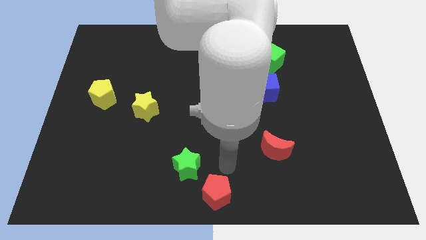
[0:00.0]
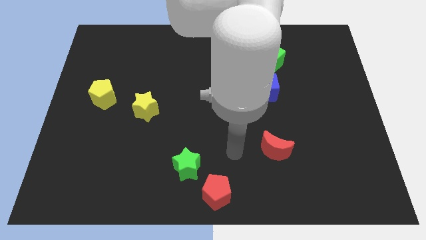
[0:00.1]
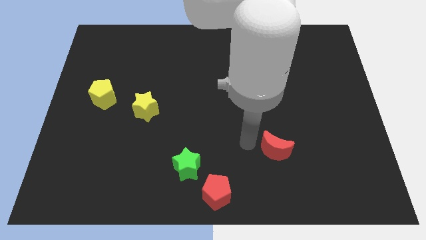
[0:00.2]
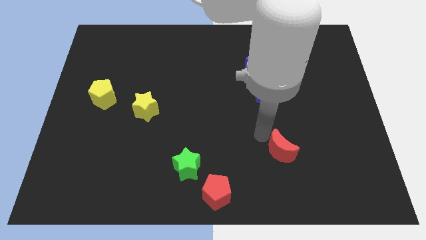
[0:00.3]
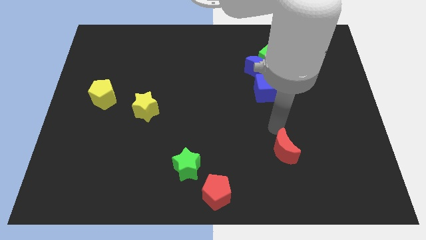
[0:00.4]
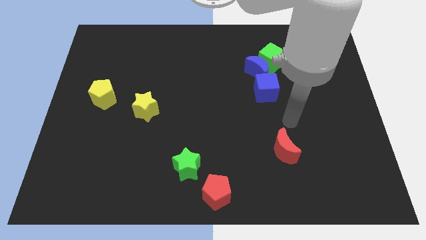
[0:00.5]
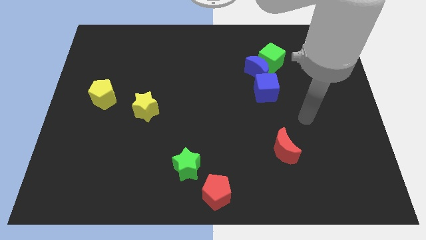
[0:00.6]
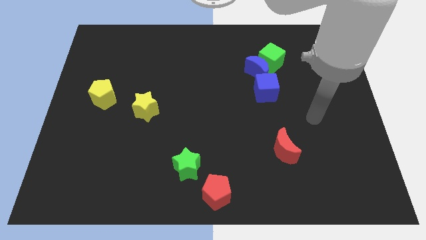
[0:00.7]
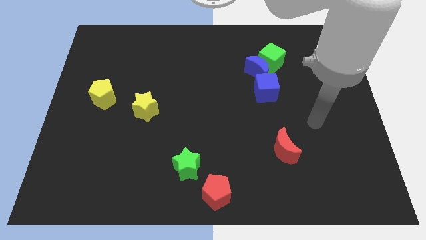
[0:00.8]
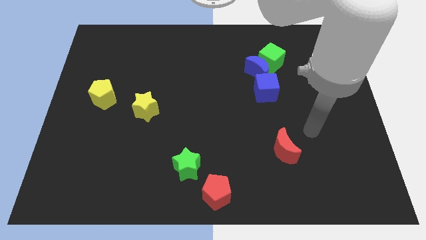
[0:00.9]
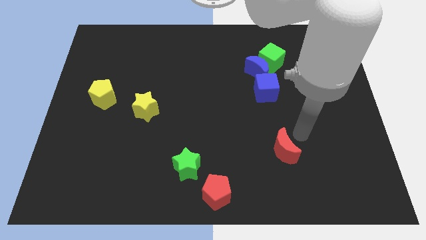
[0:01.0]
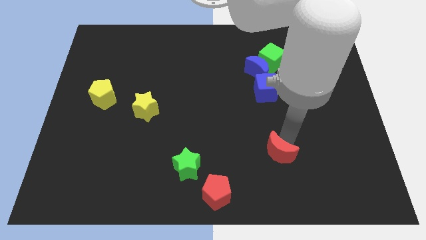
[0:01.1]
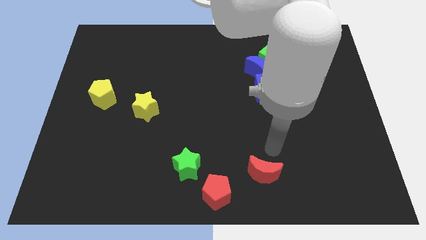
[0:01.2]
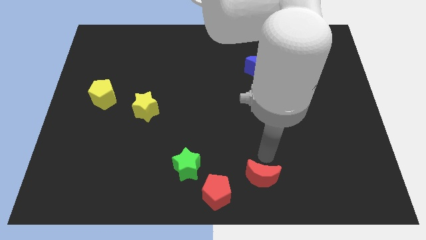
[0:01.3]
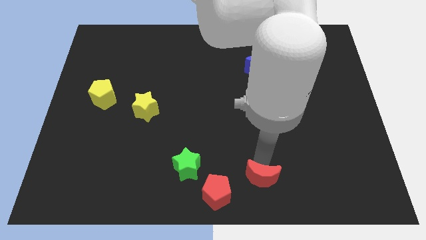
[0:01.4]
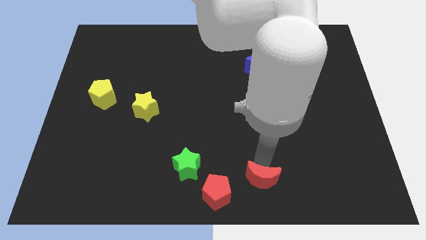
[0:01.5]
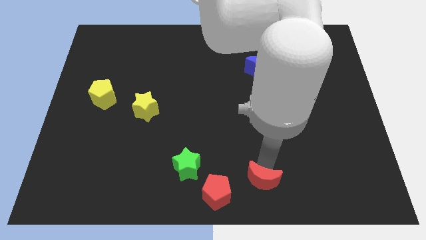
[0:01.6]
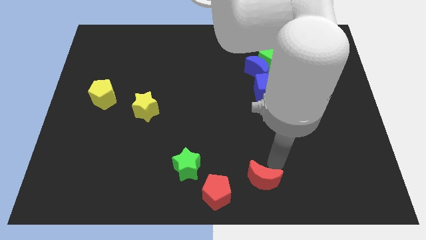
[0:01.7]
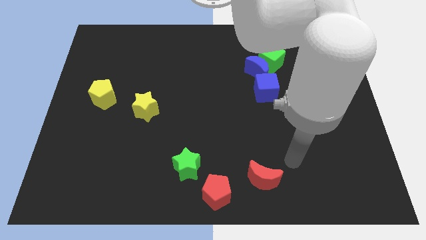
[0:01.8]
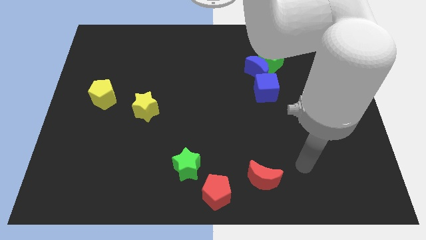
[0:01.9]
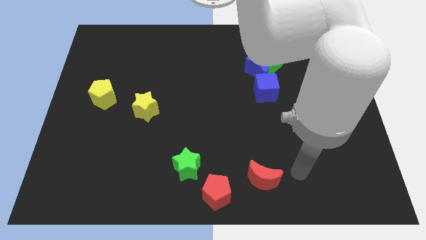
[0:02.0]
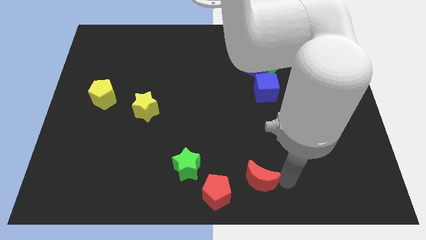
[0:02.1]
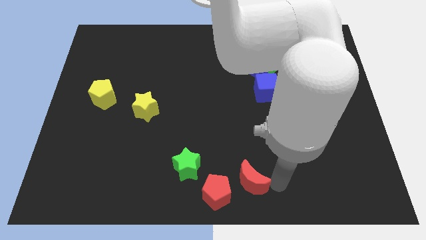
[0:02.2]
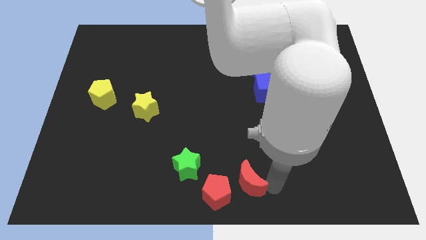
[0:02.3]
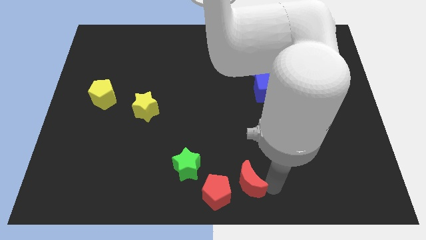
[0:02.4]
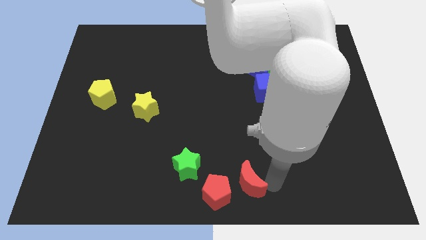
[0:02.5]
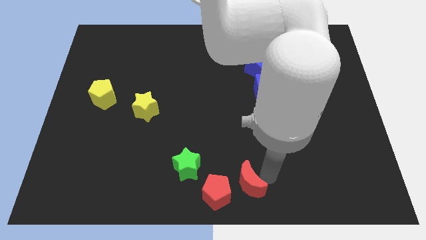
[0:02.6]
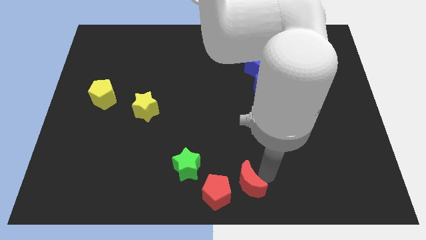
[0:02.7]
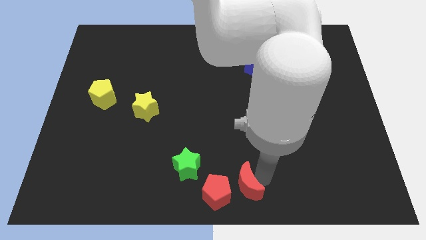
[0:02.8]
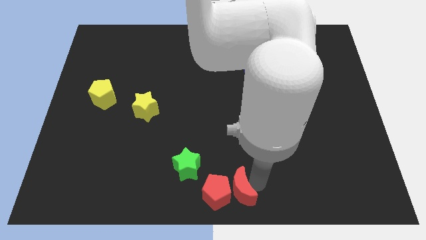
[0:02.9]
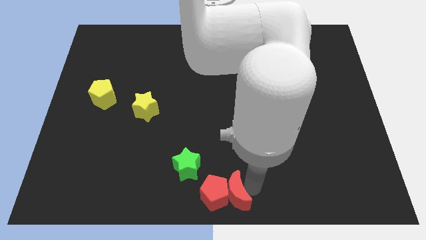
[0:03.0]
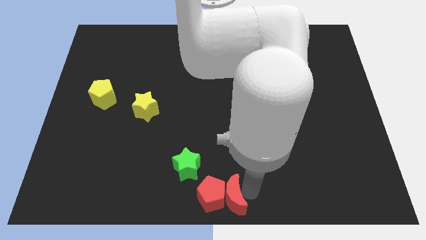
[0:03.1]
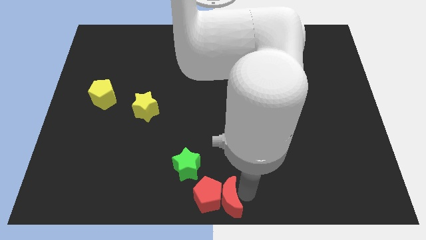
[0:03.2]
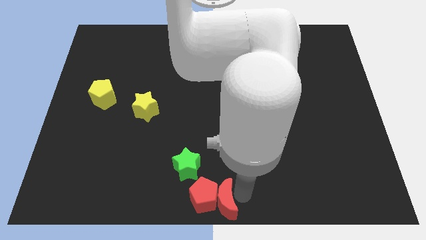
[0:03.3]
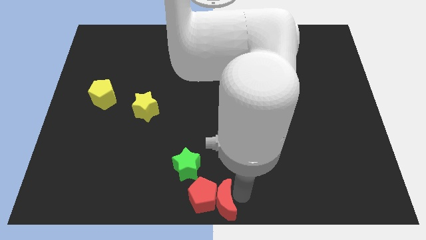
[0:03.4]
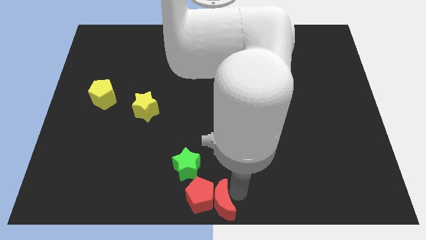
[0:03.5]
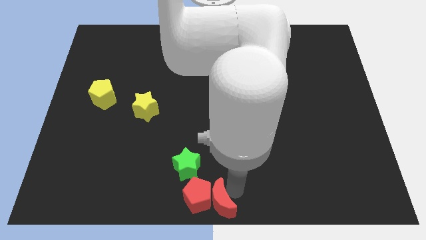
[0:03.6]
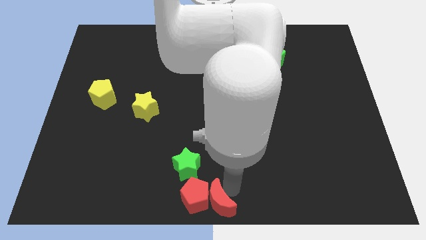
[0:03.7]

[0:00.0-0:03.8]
place the red moon to the right of the red pentagon towards the bottom center of the board

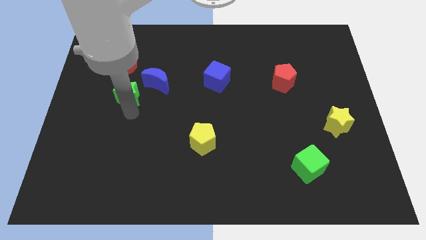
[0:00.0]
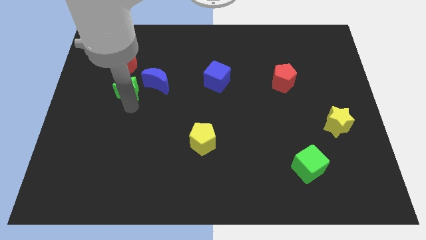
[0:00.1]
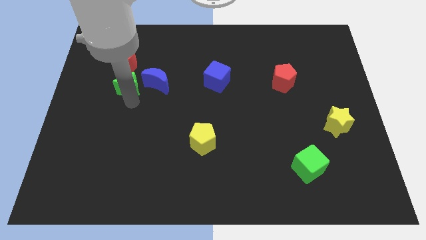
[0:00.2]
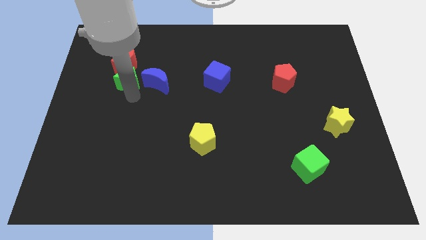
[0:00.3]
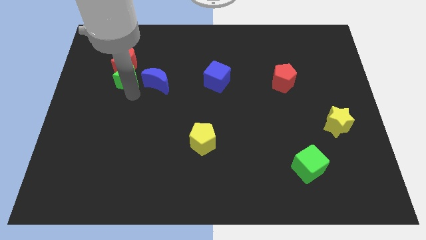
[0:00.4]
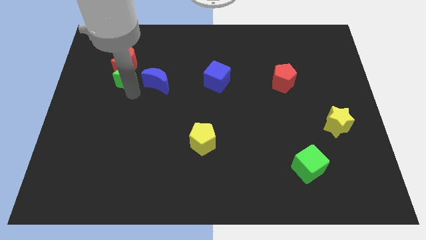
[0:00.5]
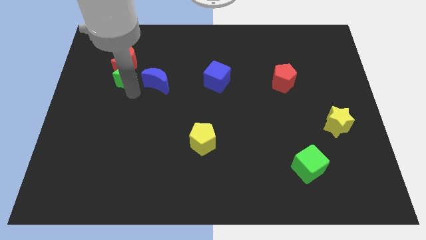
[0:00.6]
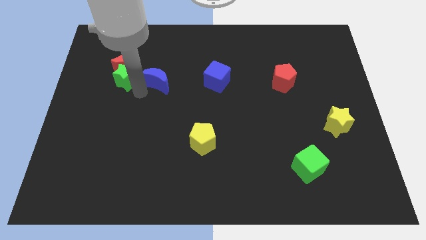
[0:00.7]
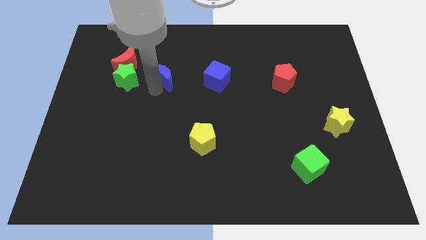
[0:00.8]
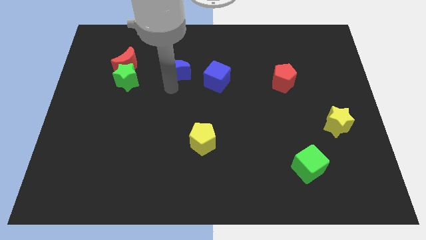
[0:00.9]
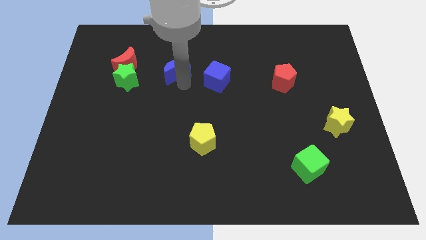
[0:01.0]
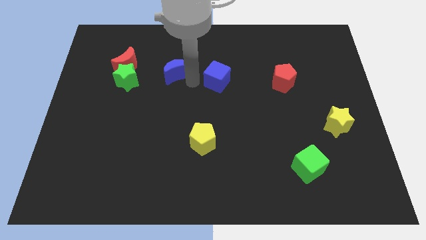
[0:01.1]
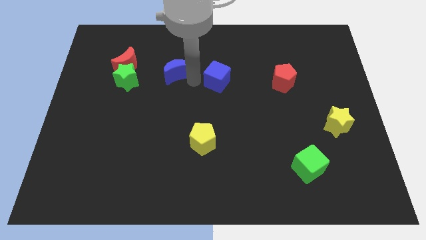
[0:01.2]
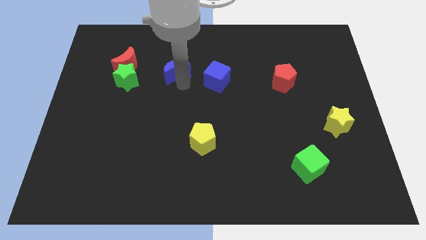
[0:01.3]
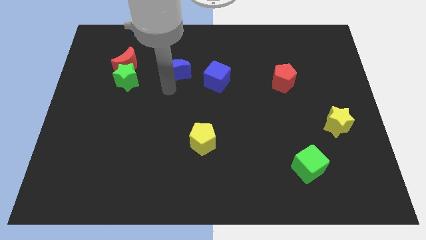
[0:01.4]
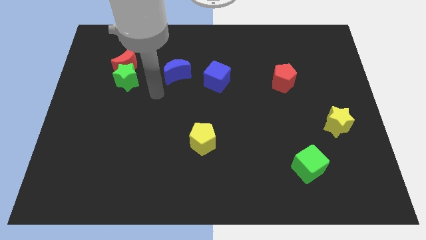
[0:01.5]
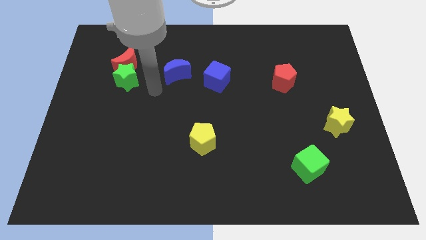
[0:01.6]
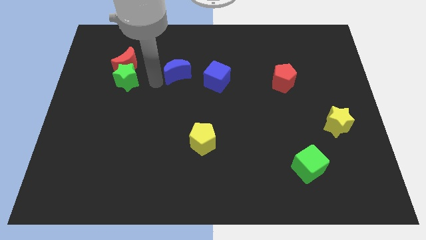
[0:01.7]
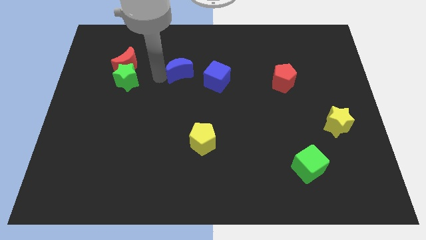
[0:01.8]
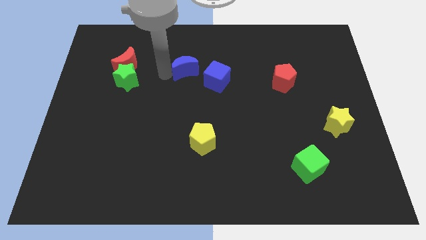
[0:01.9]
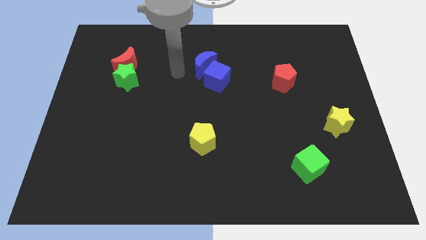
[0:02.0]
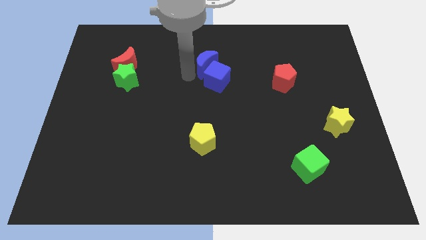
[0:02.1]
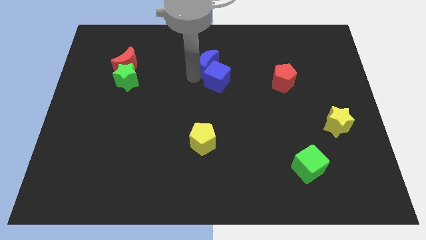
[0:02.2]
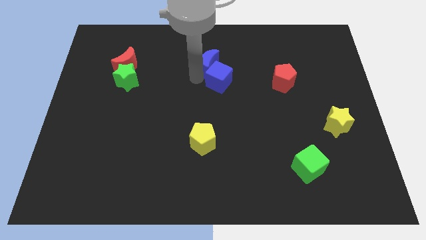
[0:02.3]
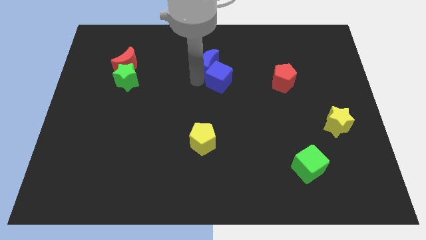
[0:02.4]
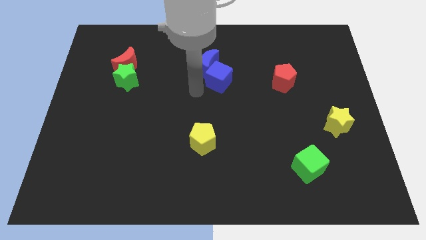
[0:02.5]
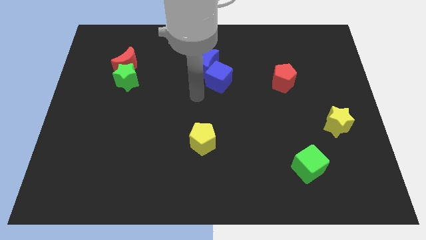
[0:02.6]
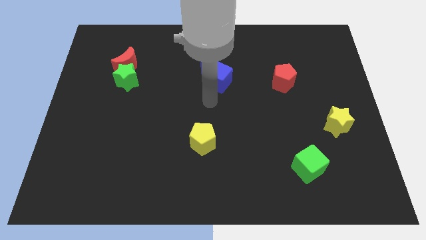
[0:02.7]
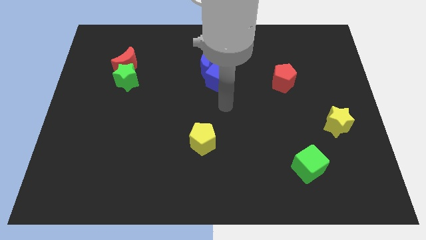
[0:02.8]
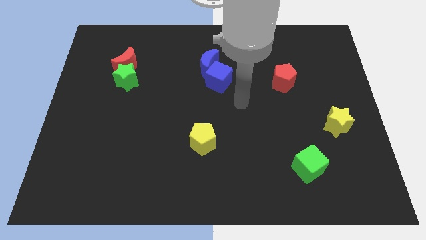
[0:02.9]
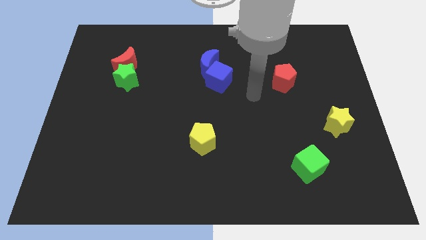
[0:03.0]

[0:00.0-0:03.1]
move the blue crescent to the top left to the blue cube

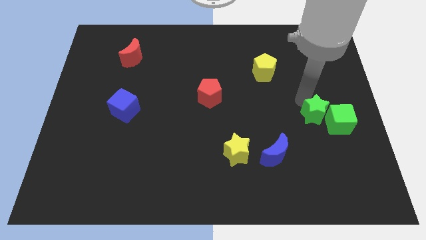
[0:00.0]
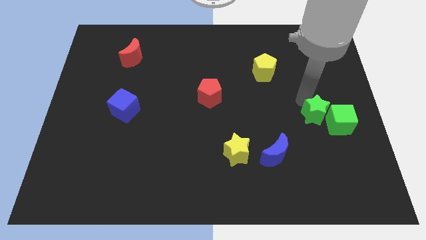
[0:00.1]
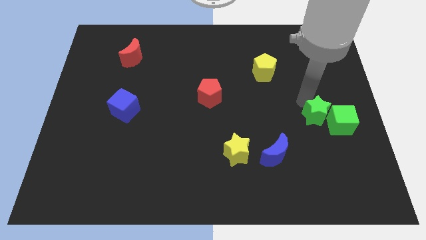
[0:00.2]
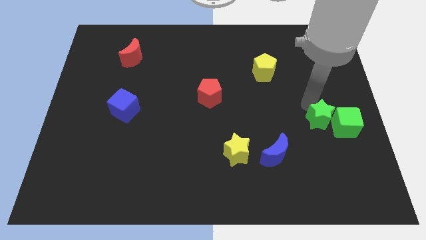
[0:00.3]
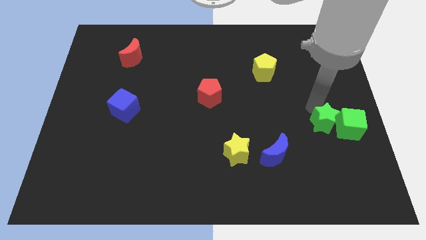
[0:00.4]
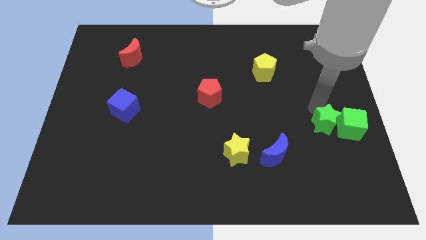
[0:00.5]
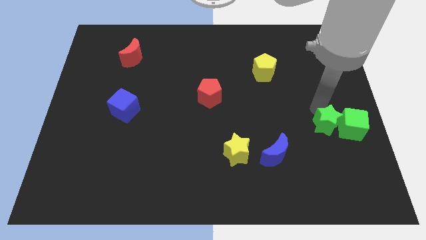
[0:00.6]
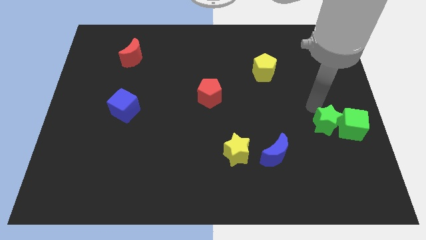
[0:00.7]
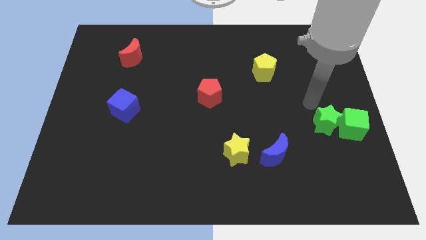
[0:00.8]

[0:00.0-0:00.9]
push the green star and green cube to the right side of the board

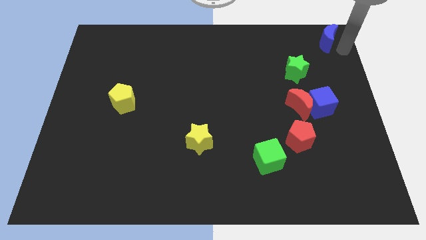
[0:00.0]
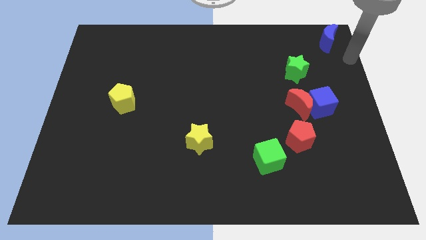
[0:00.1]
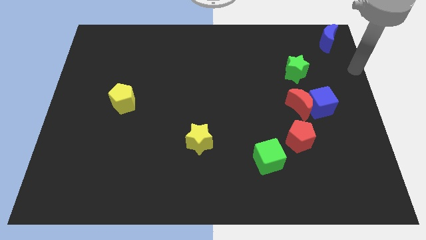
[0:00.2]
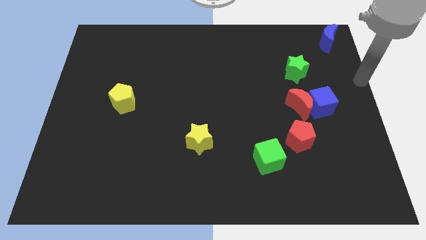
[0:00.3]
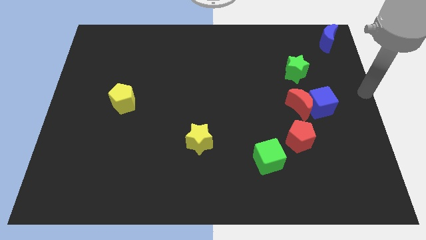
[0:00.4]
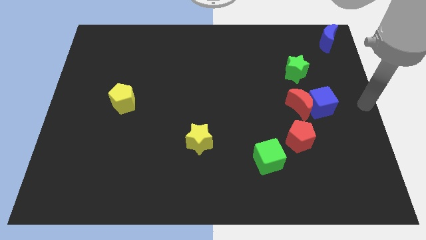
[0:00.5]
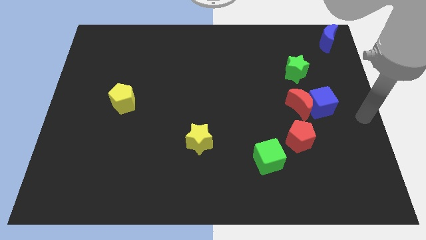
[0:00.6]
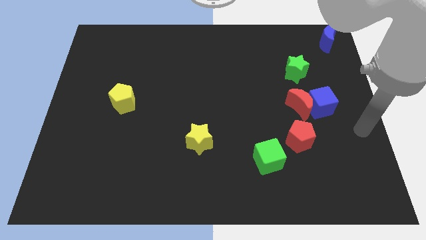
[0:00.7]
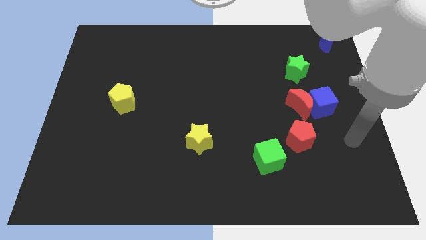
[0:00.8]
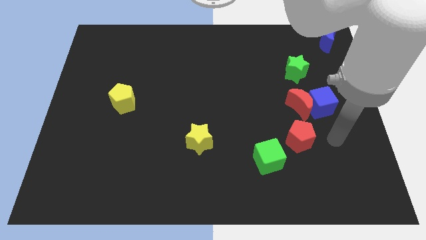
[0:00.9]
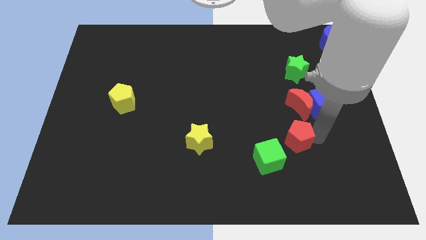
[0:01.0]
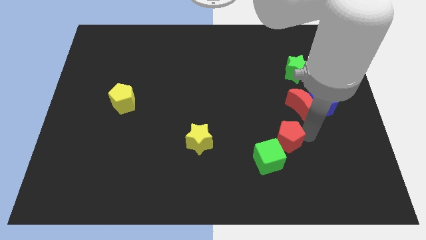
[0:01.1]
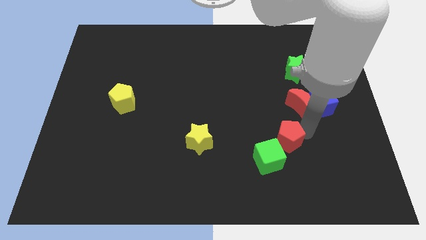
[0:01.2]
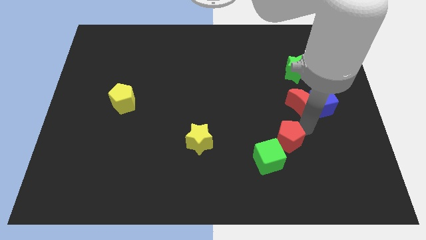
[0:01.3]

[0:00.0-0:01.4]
slightly move the red pentagon to the top right of the green cube
